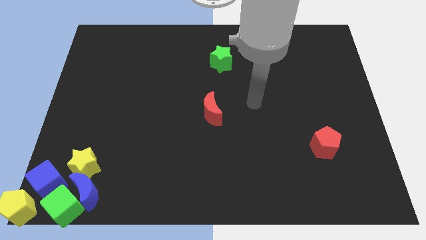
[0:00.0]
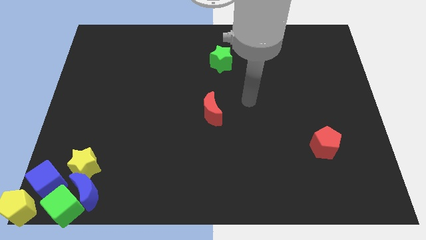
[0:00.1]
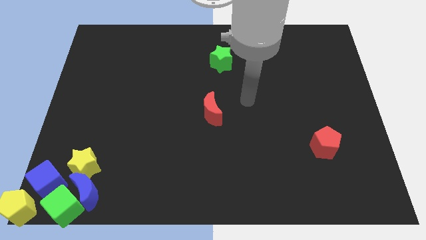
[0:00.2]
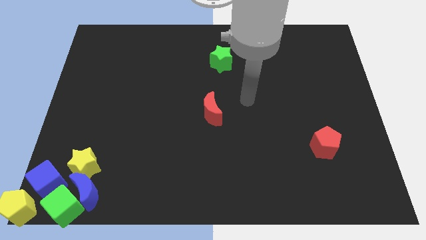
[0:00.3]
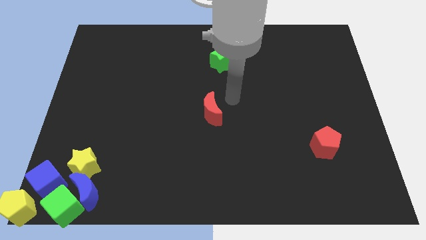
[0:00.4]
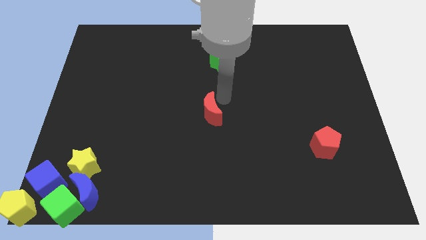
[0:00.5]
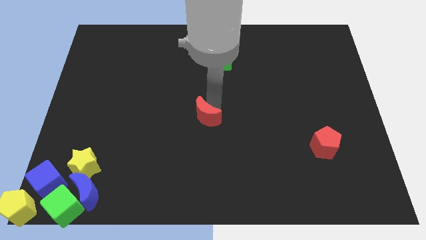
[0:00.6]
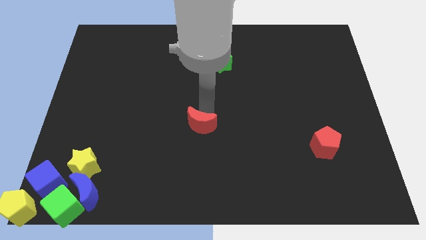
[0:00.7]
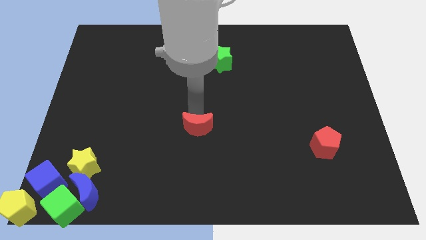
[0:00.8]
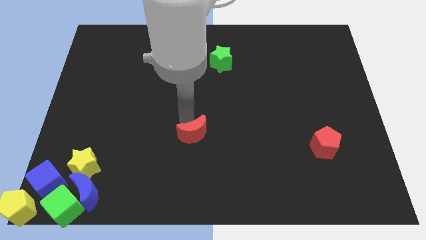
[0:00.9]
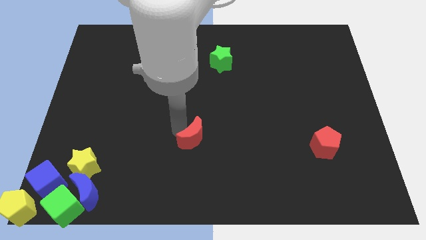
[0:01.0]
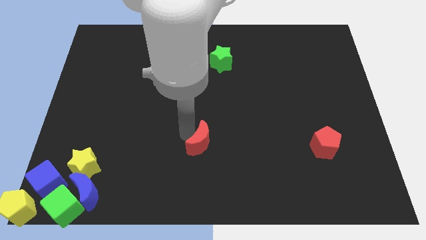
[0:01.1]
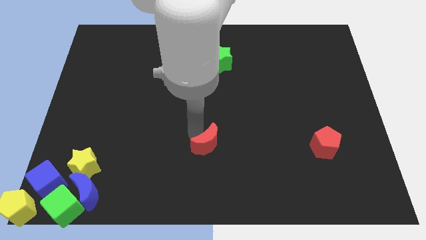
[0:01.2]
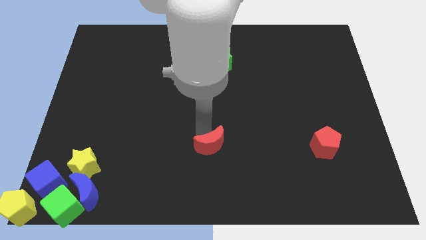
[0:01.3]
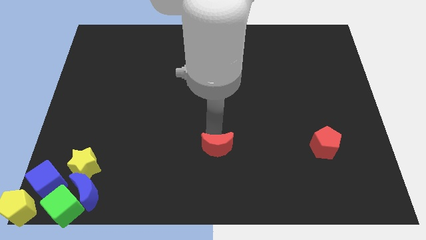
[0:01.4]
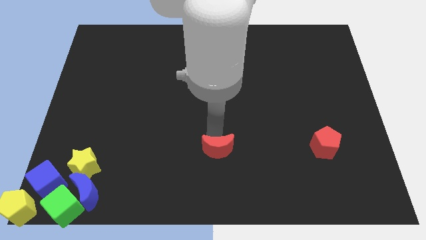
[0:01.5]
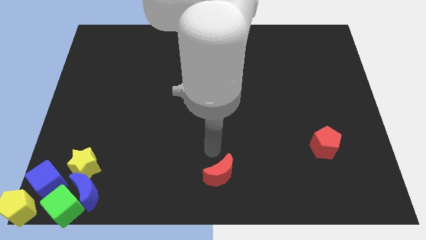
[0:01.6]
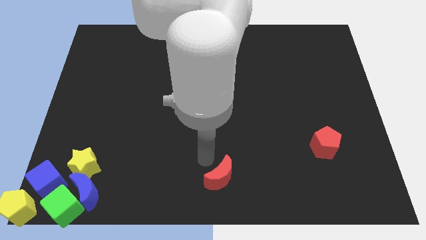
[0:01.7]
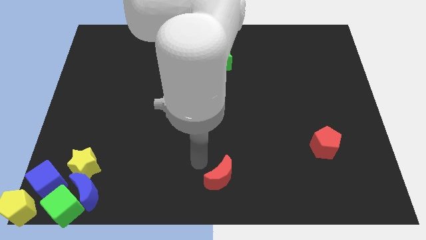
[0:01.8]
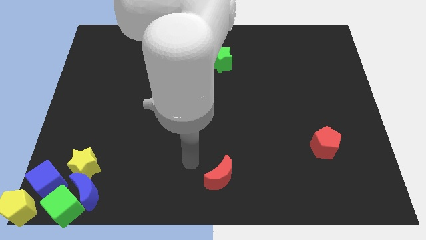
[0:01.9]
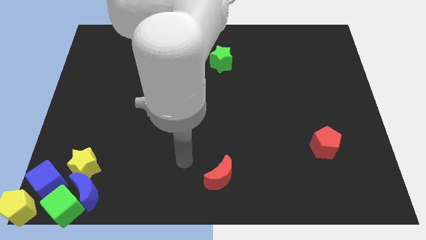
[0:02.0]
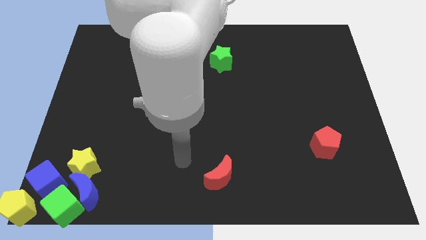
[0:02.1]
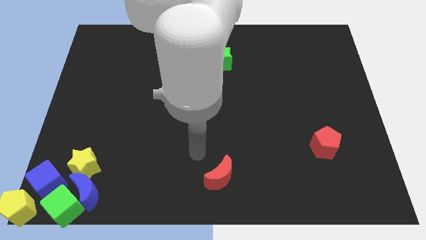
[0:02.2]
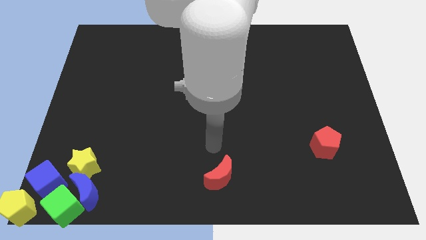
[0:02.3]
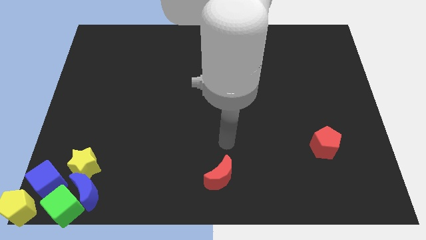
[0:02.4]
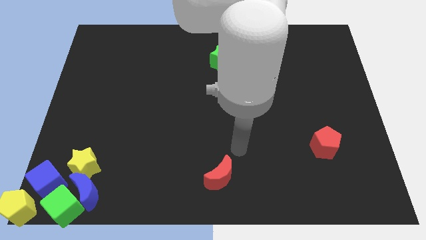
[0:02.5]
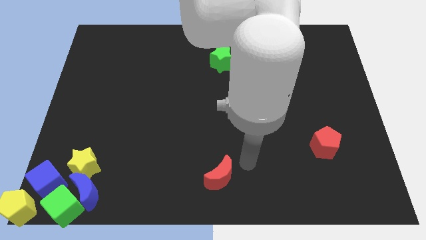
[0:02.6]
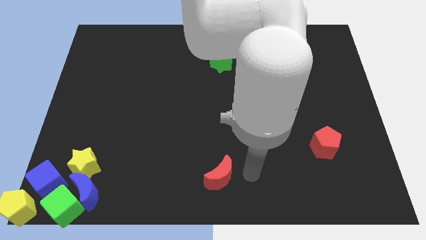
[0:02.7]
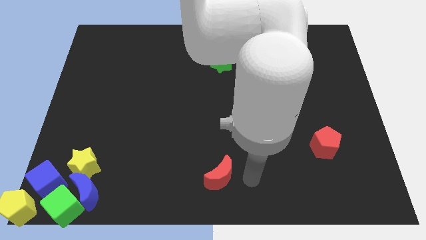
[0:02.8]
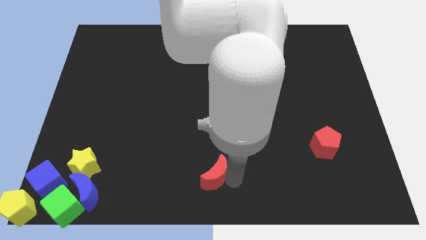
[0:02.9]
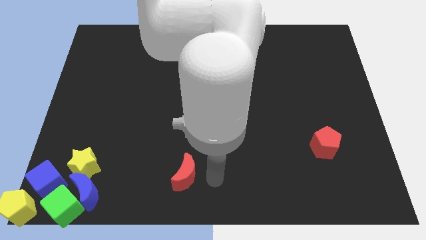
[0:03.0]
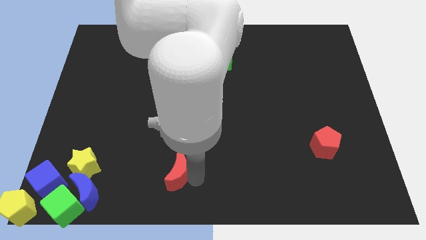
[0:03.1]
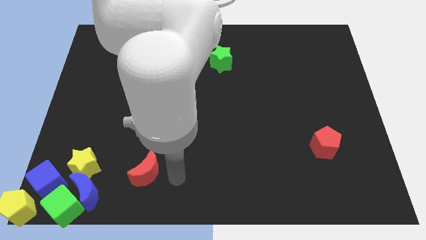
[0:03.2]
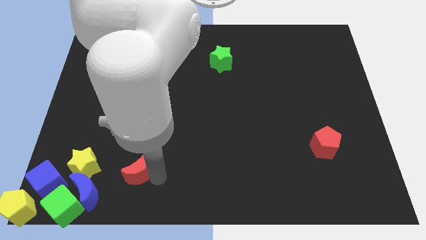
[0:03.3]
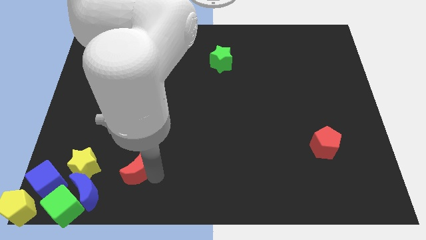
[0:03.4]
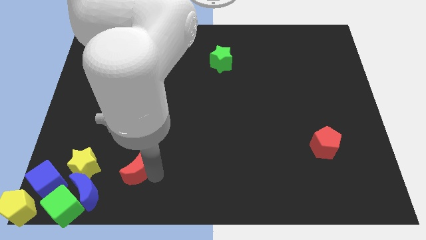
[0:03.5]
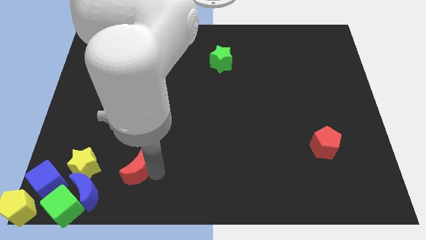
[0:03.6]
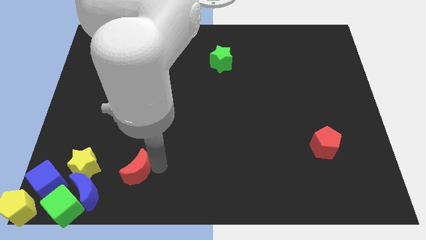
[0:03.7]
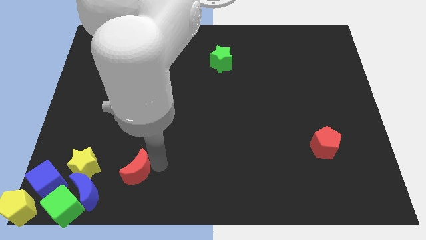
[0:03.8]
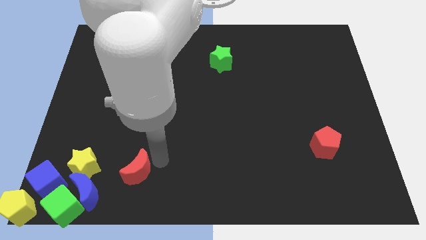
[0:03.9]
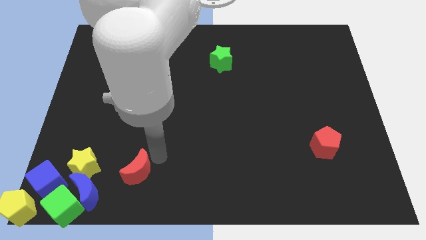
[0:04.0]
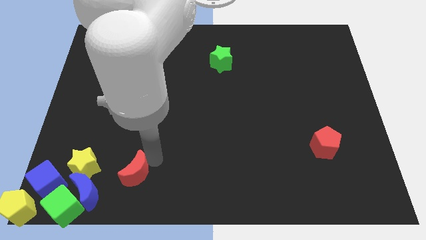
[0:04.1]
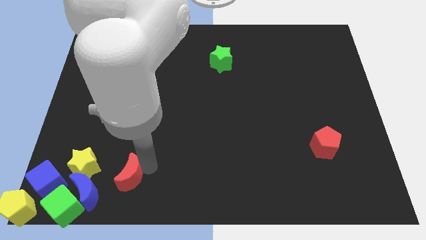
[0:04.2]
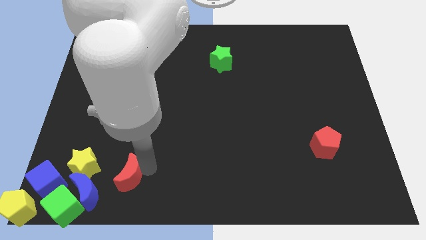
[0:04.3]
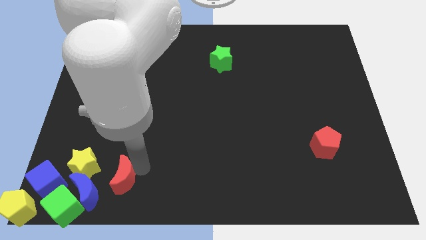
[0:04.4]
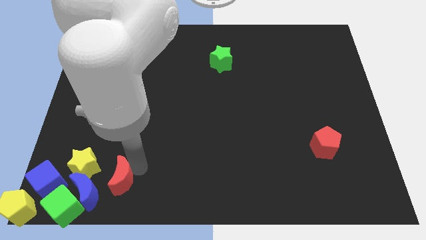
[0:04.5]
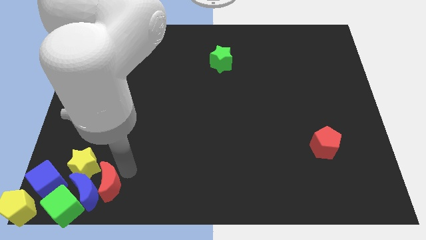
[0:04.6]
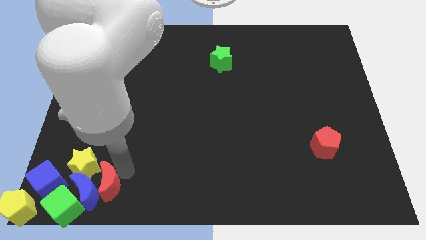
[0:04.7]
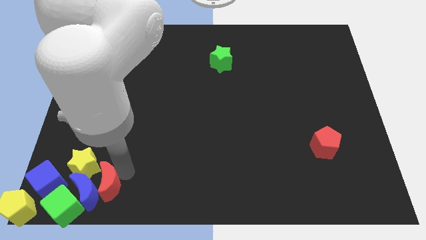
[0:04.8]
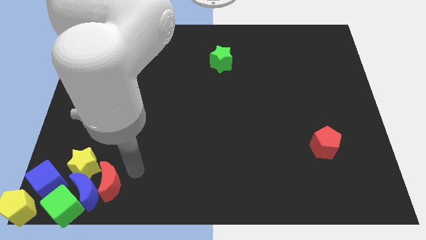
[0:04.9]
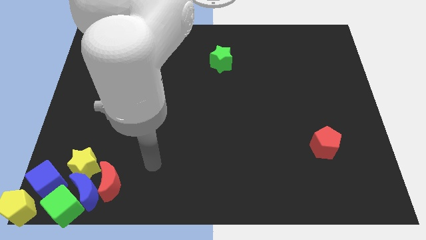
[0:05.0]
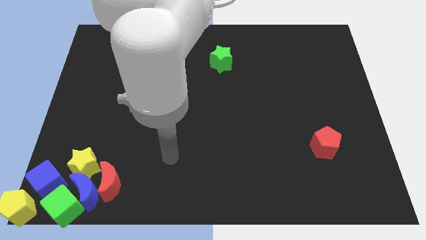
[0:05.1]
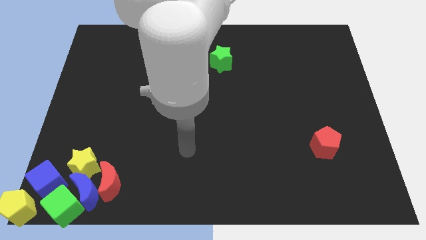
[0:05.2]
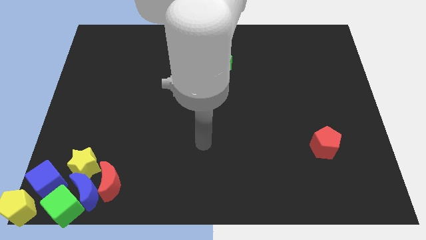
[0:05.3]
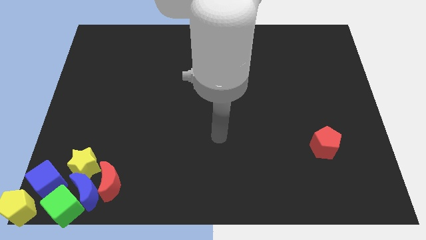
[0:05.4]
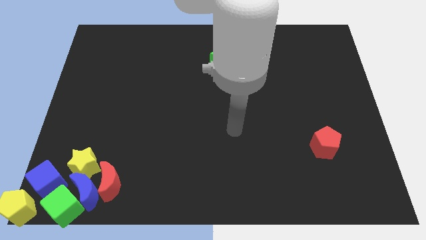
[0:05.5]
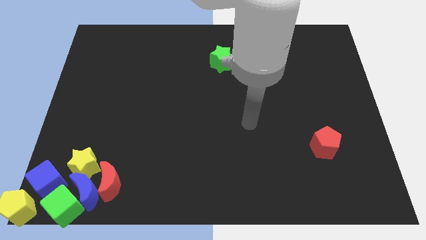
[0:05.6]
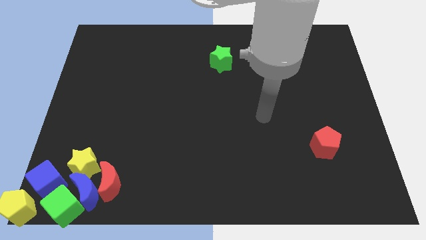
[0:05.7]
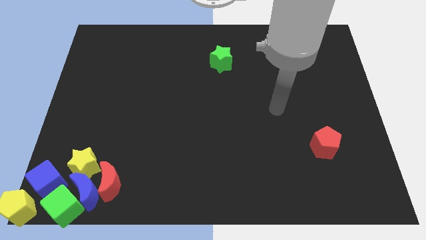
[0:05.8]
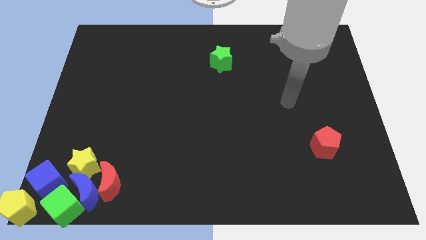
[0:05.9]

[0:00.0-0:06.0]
push the red crescent towards the group of blocks

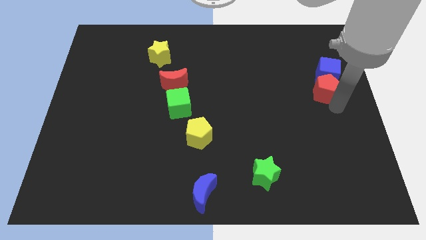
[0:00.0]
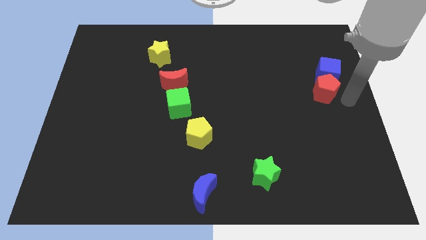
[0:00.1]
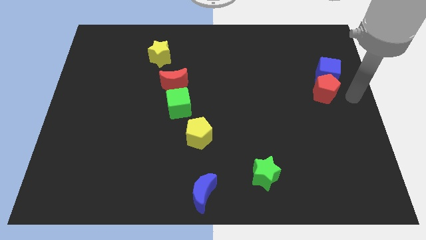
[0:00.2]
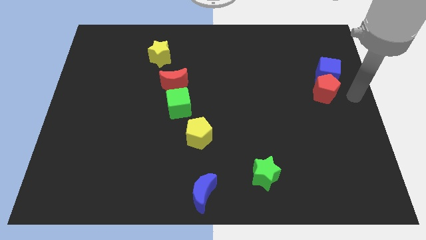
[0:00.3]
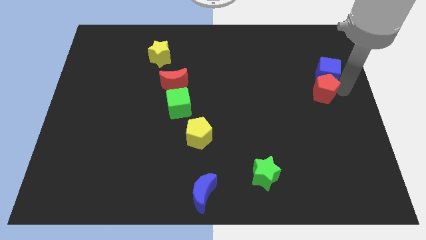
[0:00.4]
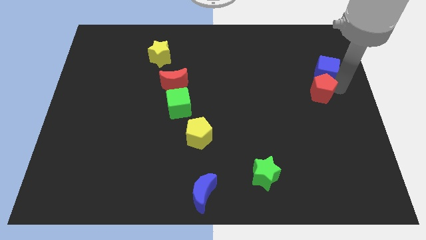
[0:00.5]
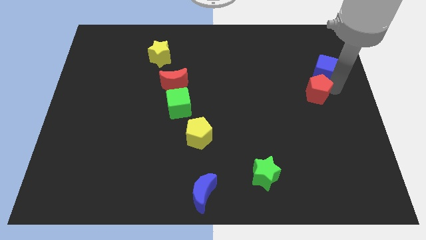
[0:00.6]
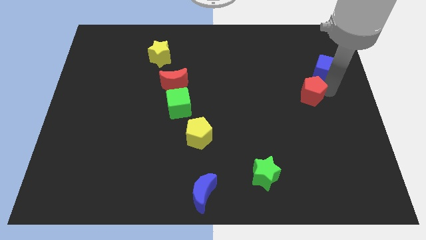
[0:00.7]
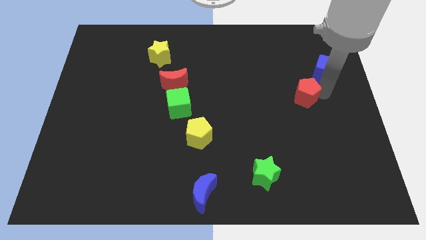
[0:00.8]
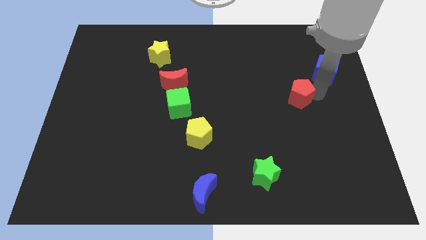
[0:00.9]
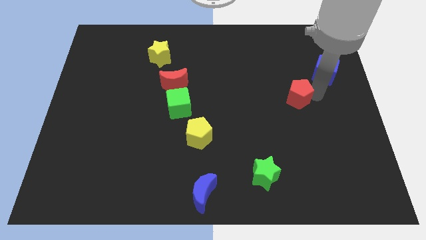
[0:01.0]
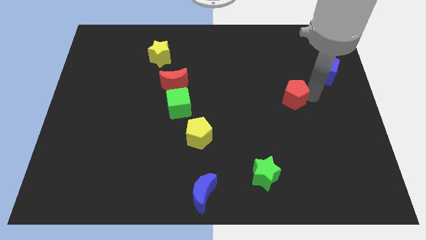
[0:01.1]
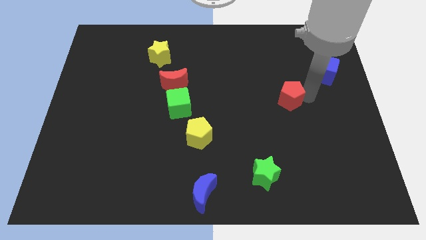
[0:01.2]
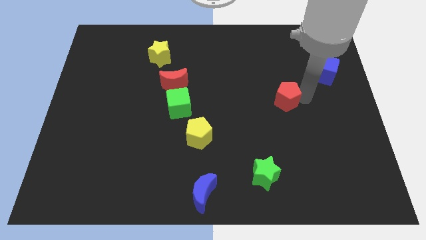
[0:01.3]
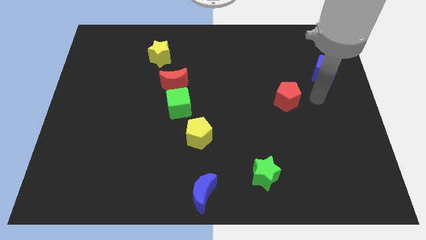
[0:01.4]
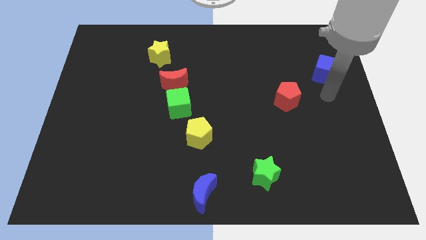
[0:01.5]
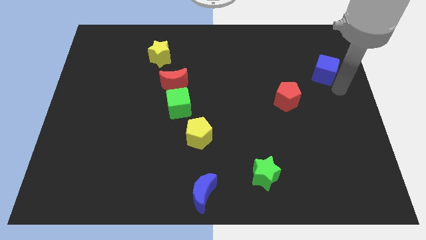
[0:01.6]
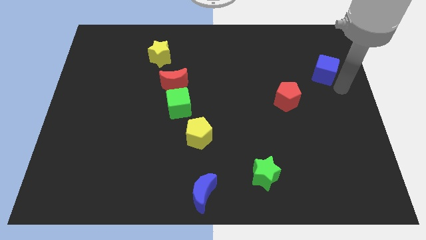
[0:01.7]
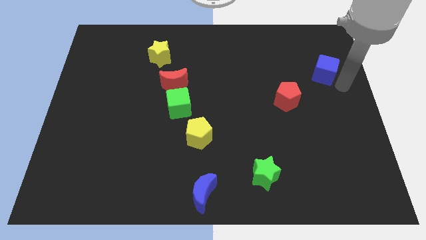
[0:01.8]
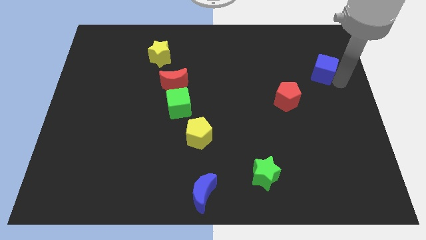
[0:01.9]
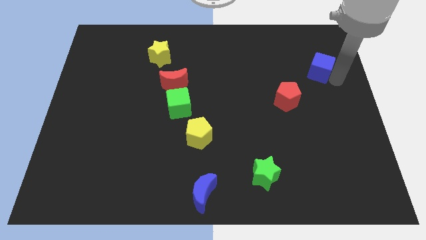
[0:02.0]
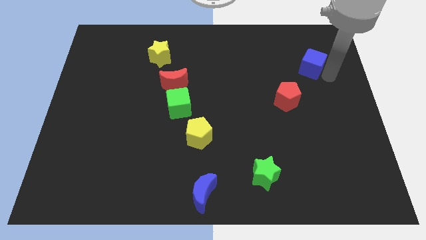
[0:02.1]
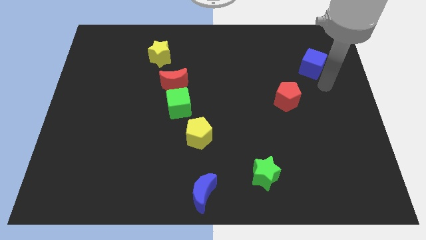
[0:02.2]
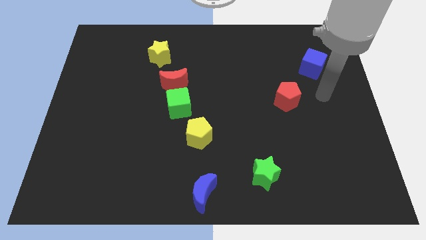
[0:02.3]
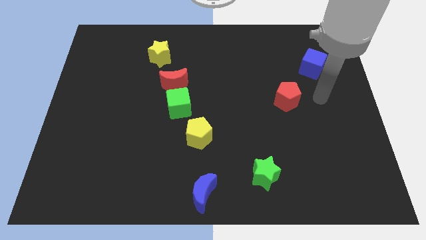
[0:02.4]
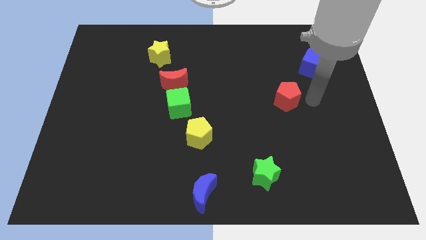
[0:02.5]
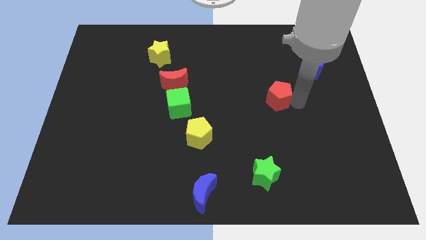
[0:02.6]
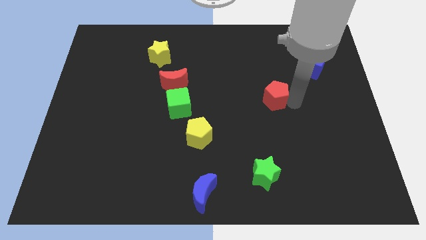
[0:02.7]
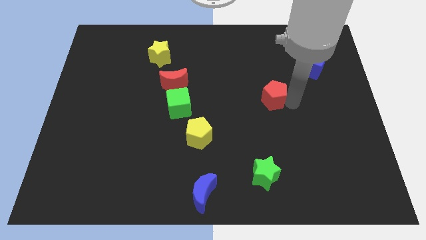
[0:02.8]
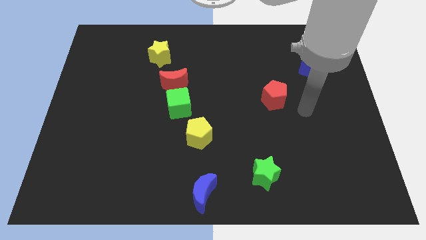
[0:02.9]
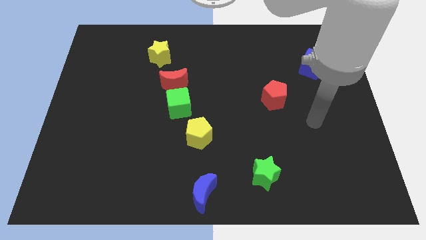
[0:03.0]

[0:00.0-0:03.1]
separate red pentagon from blue cube
